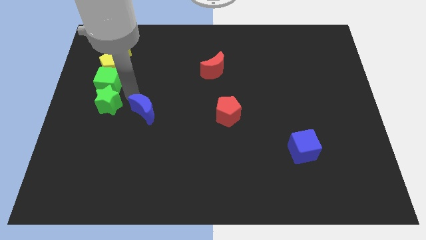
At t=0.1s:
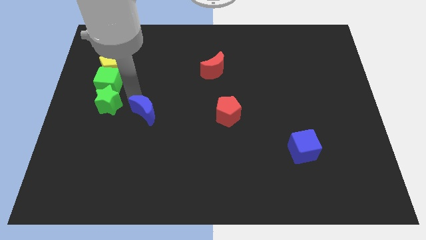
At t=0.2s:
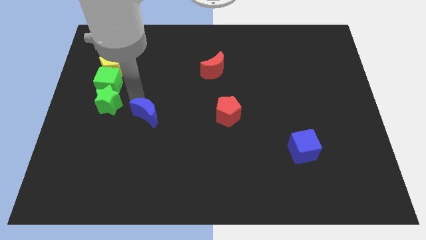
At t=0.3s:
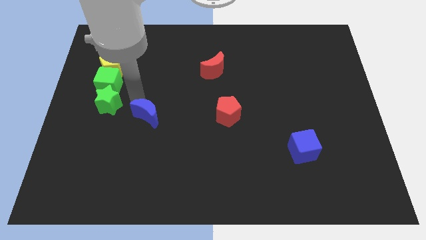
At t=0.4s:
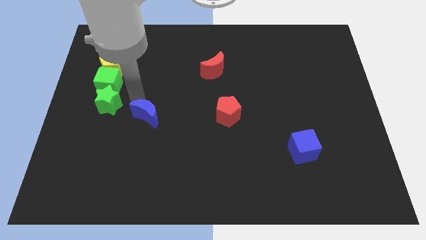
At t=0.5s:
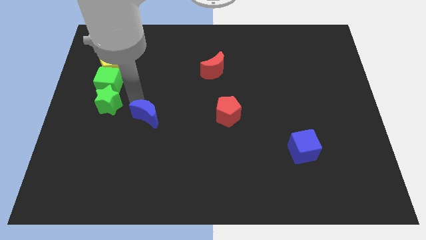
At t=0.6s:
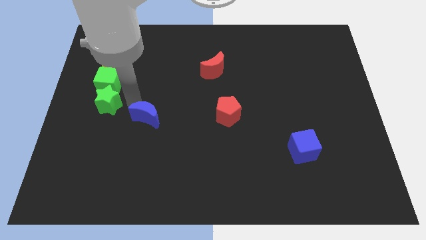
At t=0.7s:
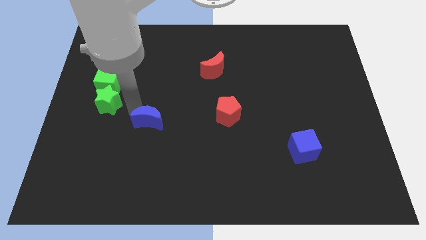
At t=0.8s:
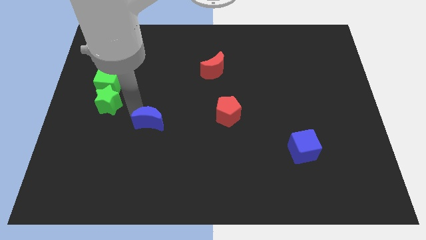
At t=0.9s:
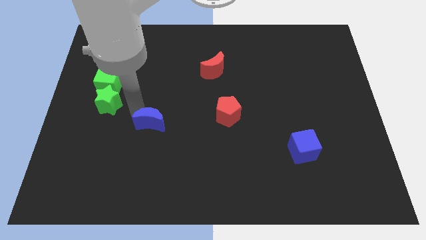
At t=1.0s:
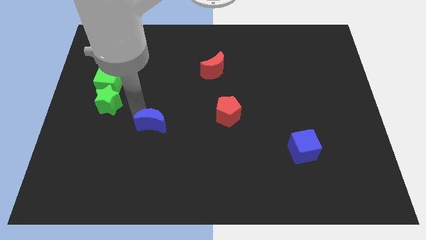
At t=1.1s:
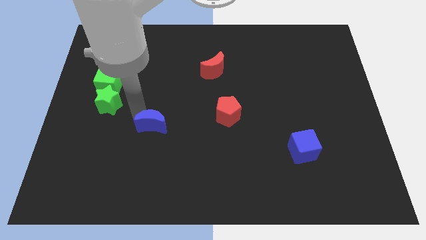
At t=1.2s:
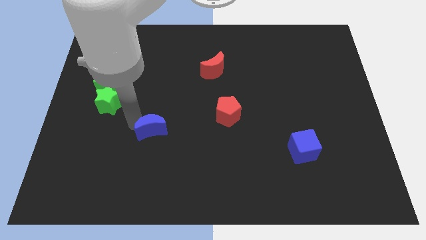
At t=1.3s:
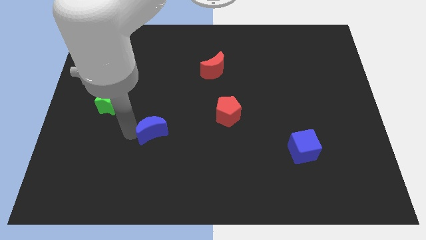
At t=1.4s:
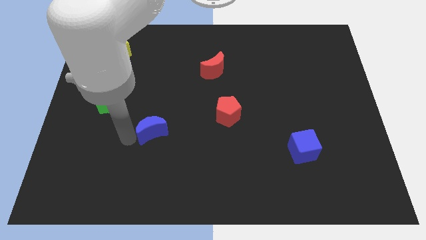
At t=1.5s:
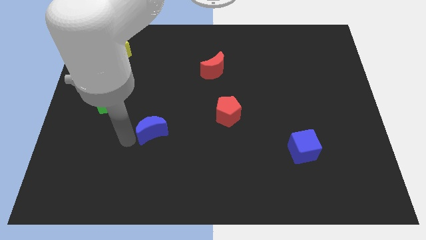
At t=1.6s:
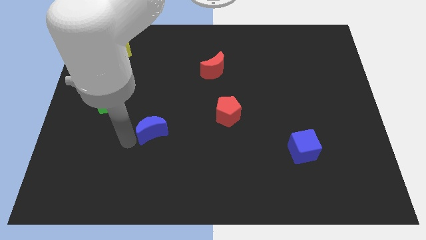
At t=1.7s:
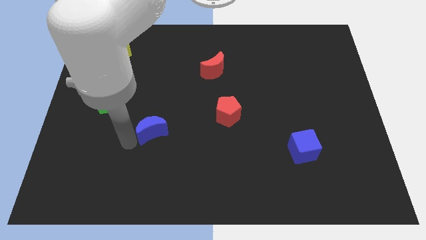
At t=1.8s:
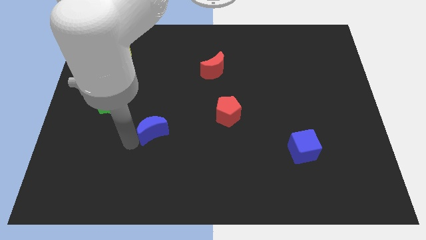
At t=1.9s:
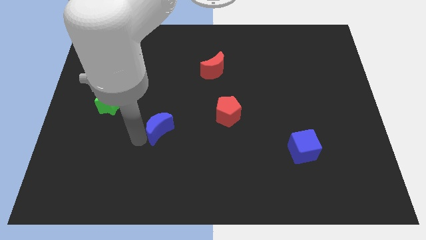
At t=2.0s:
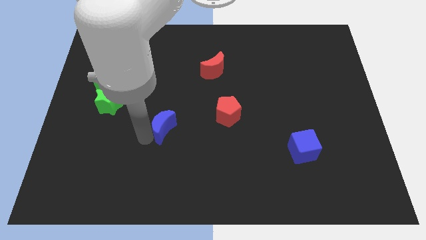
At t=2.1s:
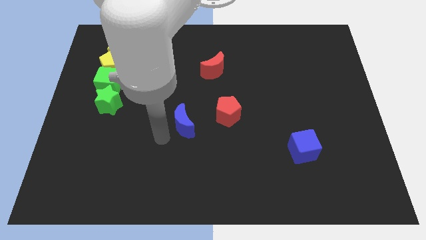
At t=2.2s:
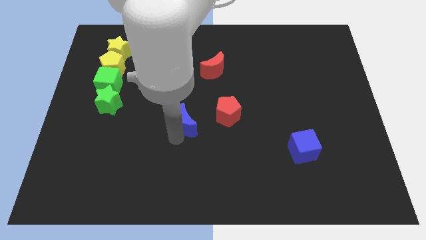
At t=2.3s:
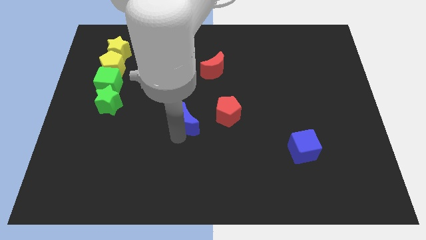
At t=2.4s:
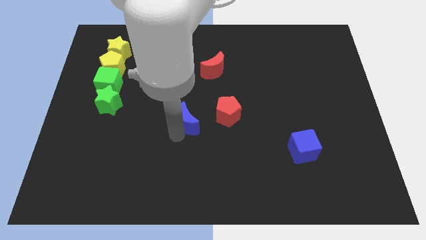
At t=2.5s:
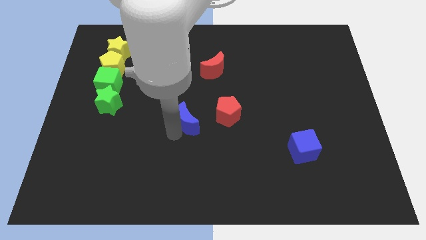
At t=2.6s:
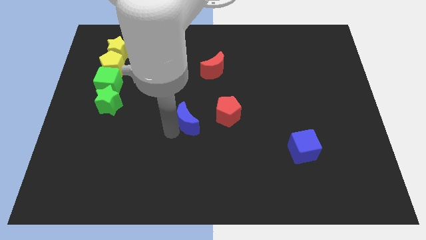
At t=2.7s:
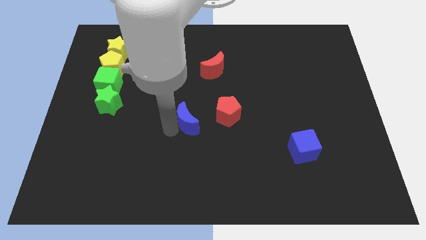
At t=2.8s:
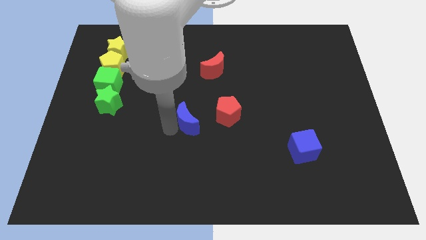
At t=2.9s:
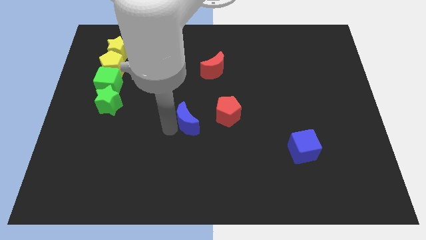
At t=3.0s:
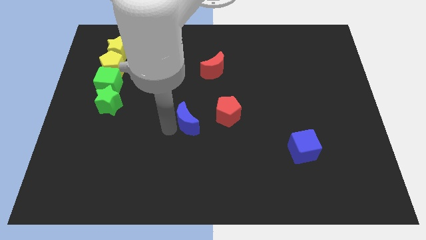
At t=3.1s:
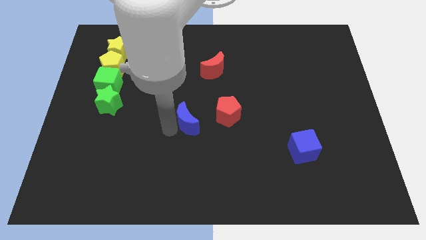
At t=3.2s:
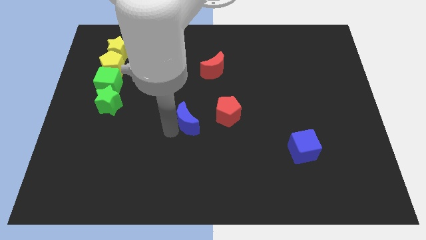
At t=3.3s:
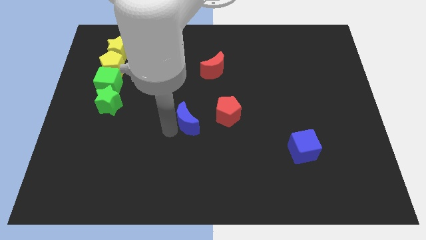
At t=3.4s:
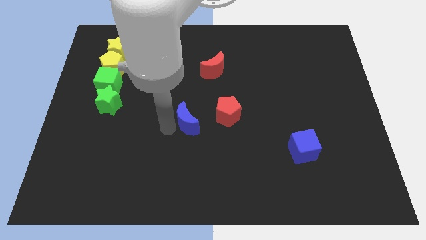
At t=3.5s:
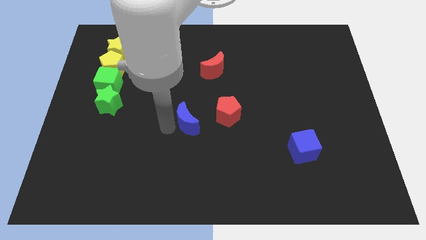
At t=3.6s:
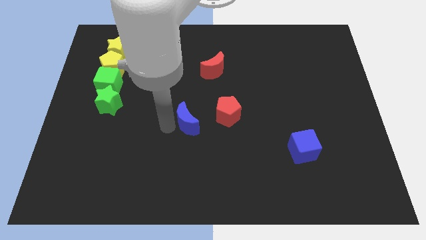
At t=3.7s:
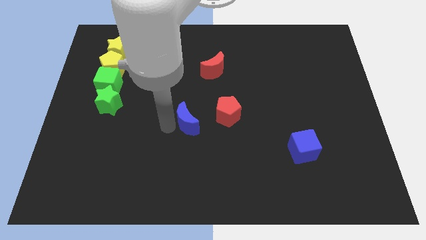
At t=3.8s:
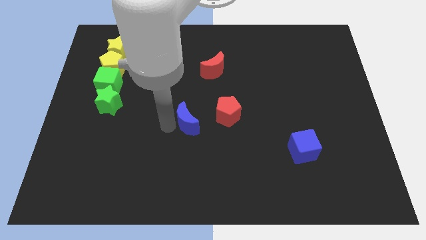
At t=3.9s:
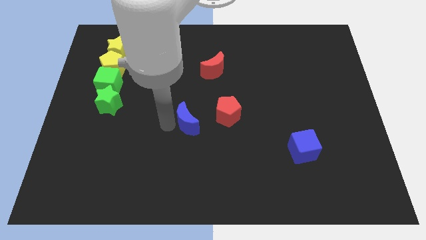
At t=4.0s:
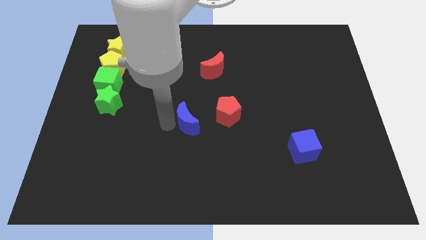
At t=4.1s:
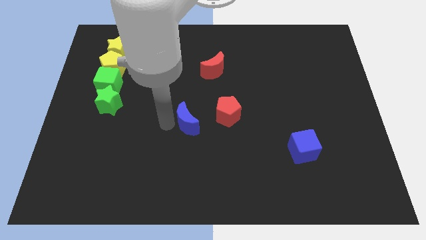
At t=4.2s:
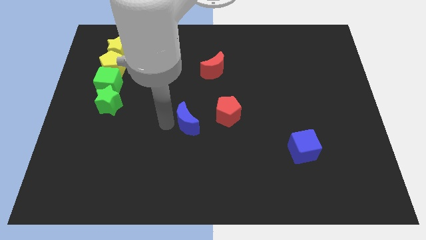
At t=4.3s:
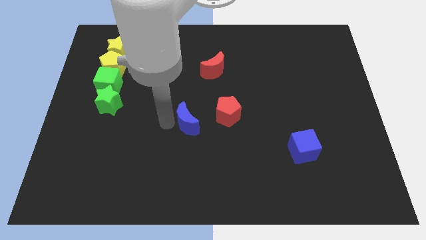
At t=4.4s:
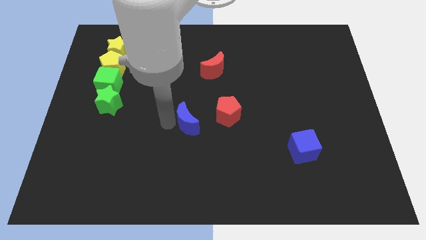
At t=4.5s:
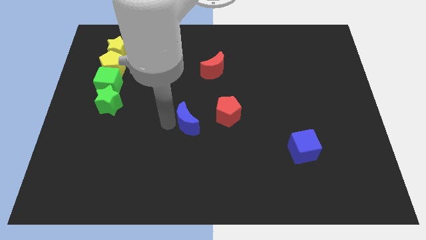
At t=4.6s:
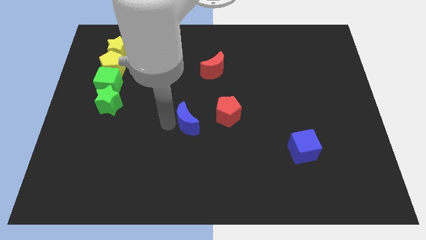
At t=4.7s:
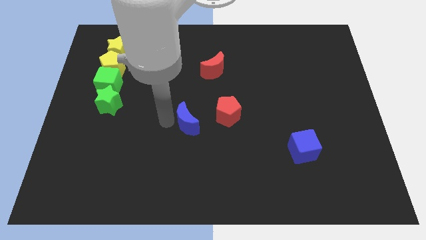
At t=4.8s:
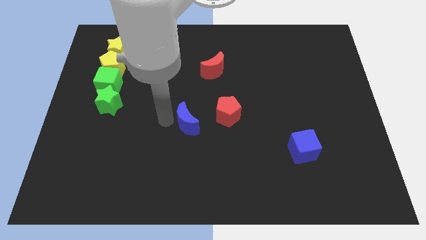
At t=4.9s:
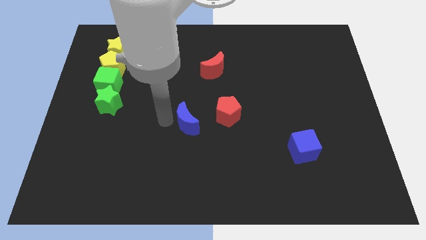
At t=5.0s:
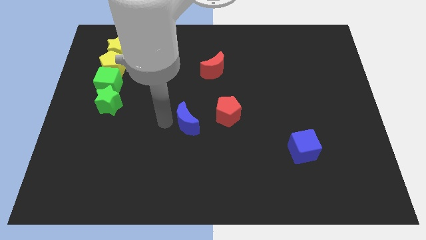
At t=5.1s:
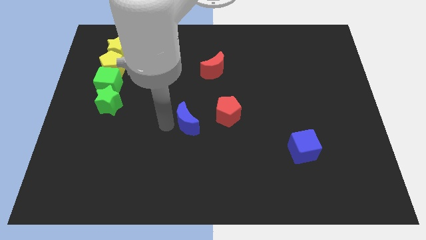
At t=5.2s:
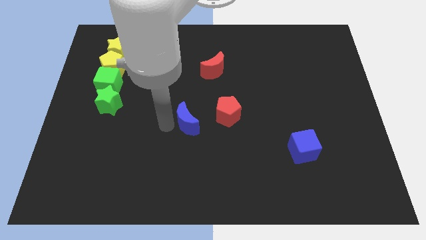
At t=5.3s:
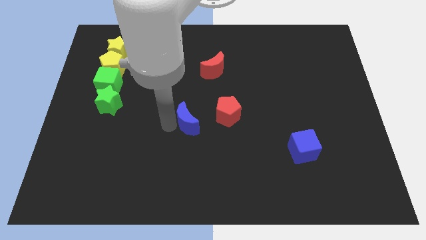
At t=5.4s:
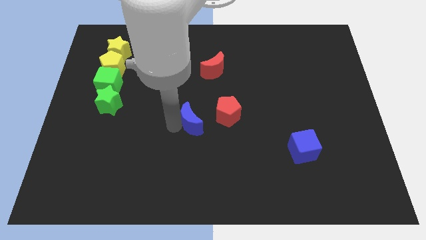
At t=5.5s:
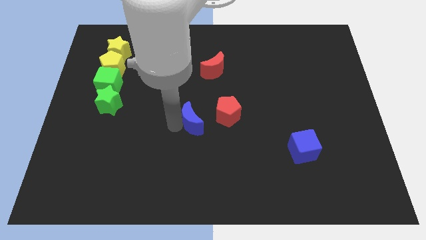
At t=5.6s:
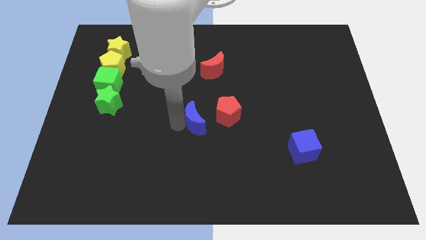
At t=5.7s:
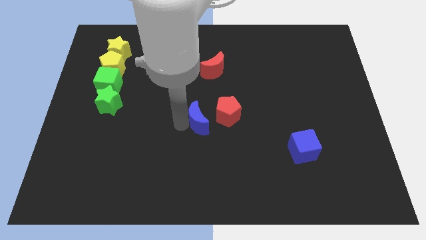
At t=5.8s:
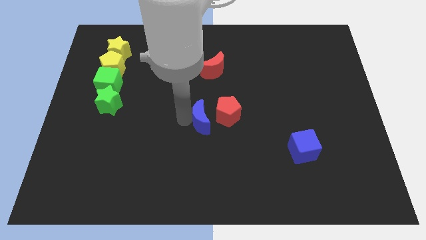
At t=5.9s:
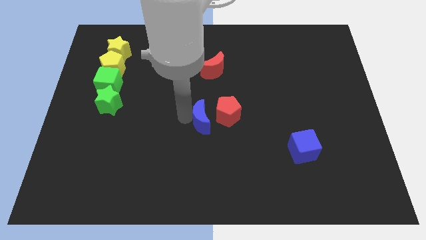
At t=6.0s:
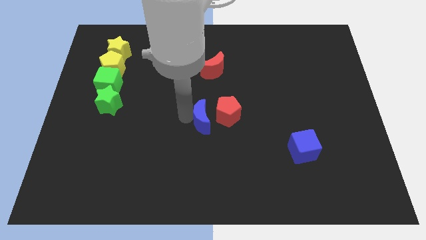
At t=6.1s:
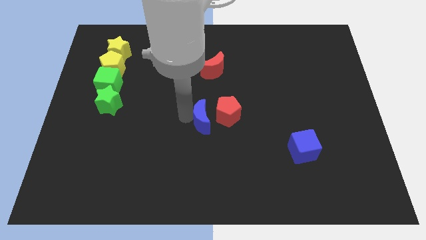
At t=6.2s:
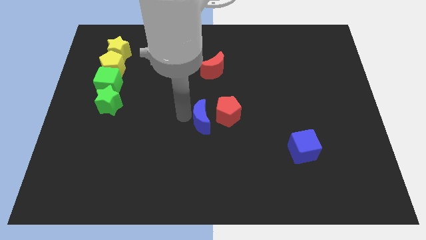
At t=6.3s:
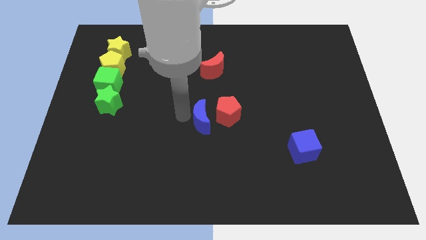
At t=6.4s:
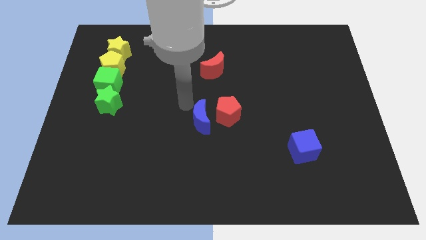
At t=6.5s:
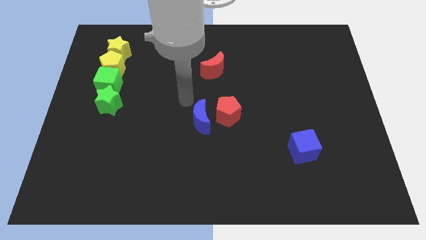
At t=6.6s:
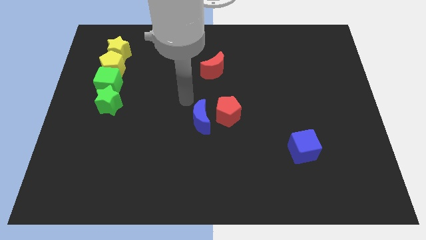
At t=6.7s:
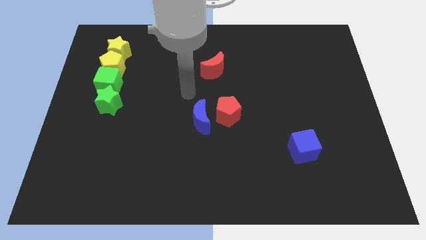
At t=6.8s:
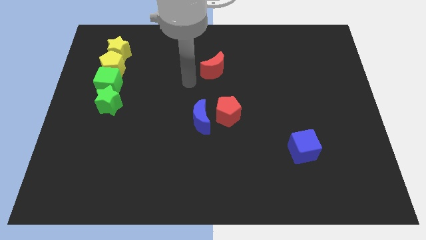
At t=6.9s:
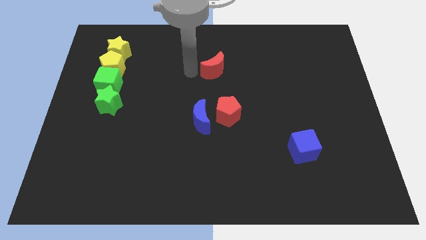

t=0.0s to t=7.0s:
push the blue moon to the center of the board

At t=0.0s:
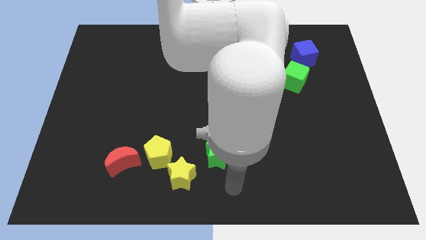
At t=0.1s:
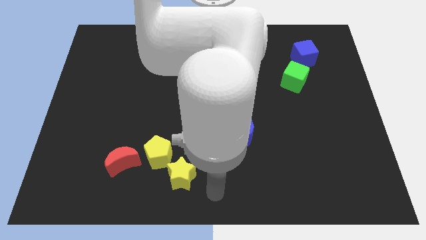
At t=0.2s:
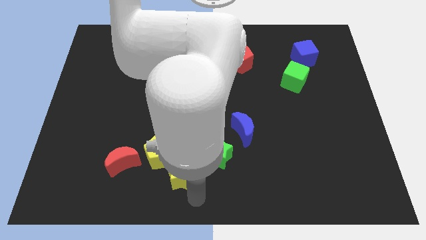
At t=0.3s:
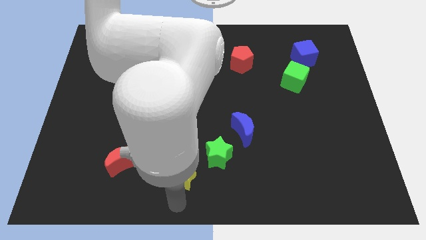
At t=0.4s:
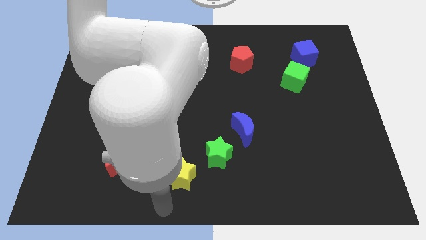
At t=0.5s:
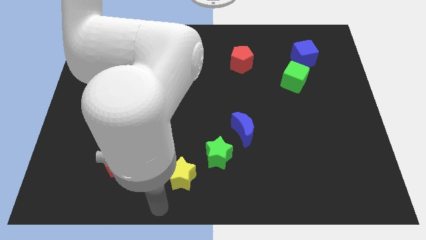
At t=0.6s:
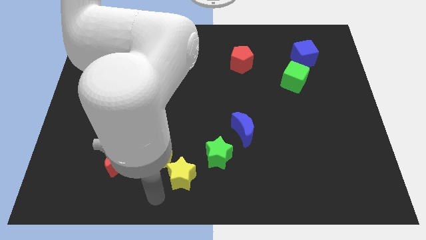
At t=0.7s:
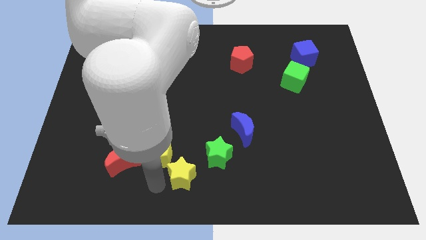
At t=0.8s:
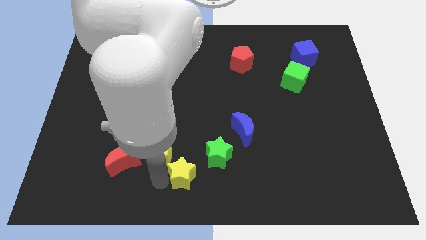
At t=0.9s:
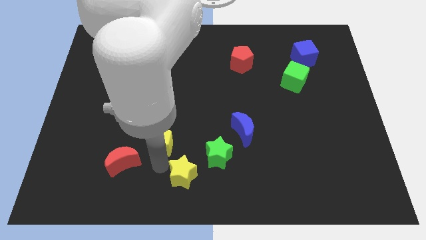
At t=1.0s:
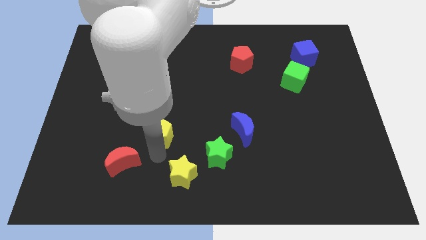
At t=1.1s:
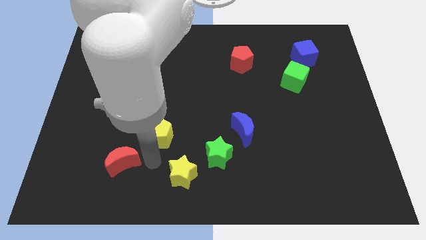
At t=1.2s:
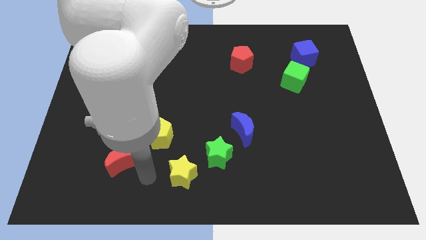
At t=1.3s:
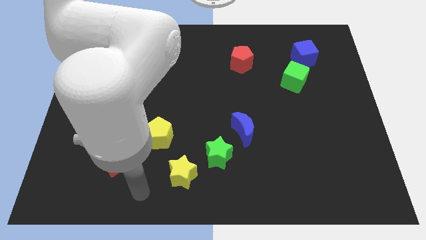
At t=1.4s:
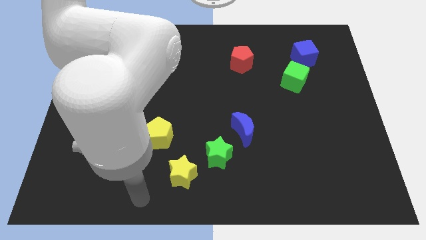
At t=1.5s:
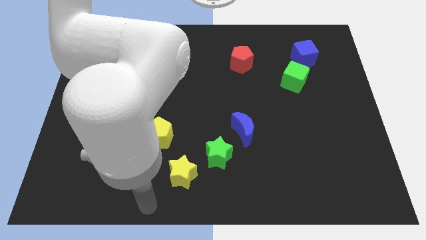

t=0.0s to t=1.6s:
push the yellow pentagon slightly to the top

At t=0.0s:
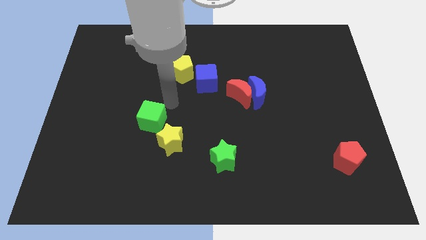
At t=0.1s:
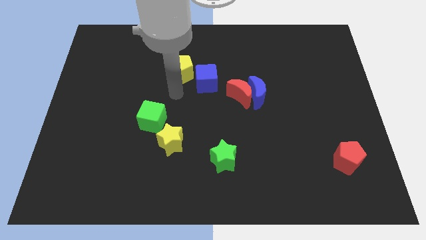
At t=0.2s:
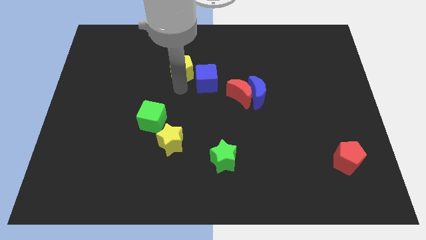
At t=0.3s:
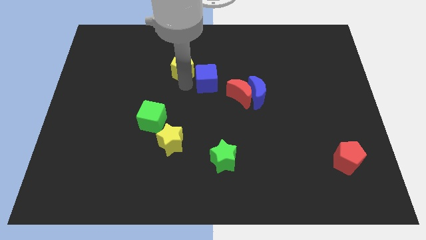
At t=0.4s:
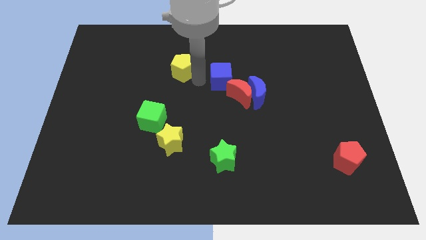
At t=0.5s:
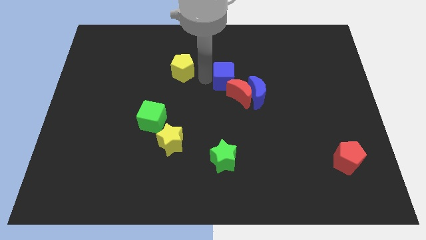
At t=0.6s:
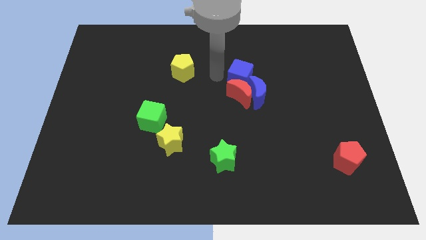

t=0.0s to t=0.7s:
separate the yellow pentagon and the blue cube
